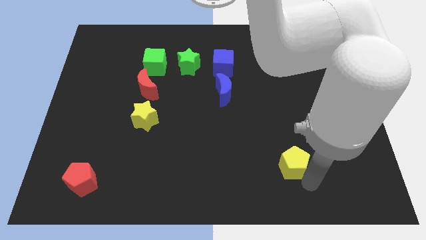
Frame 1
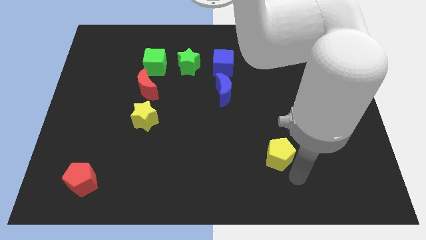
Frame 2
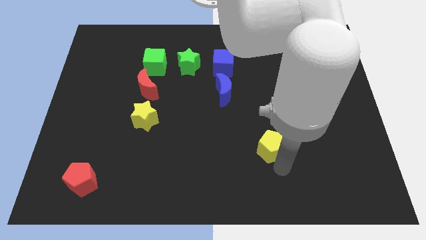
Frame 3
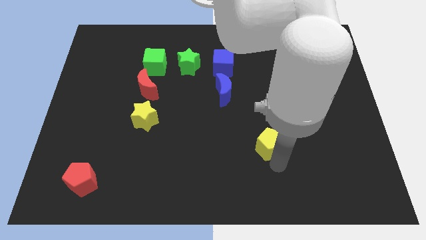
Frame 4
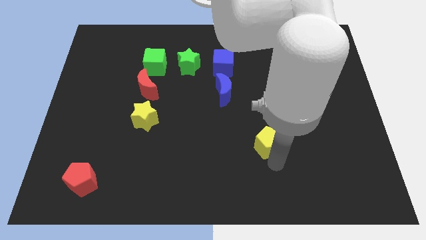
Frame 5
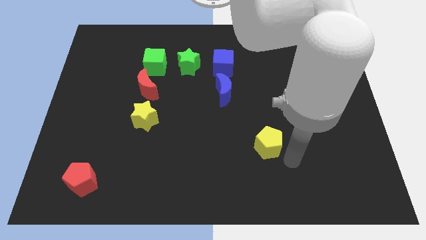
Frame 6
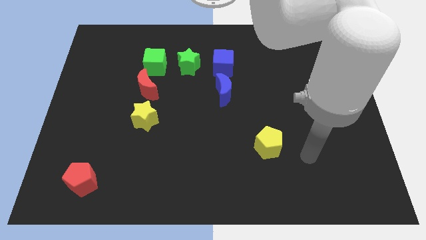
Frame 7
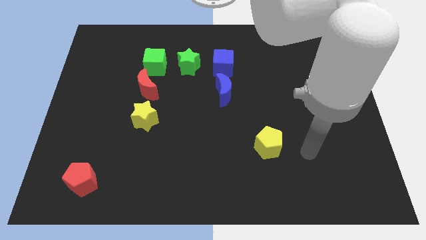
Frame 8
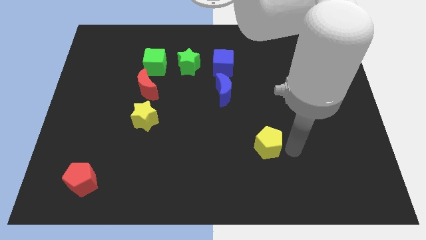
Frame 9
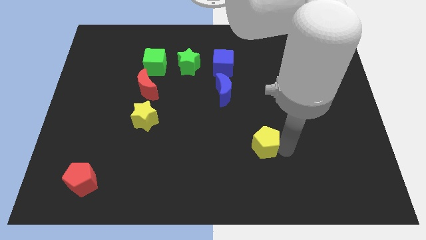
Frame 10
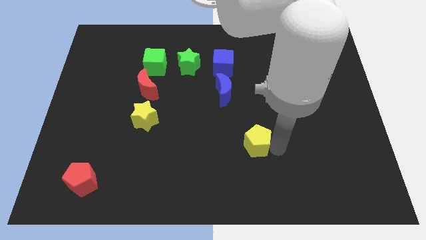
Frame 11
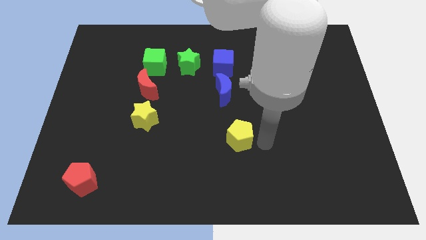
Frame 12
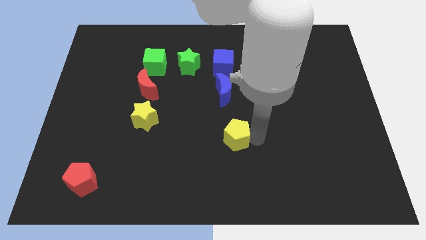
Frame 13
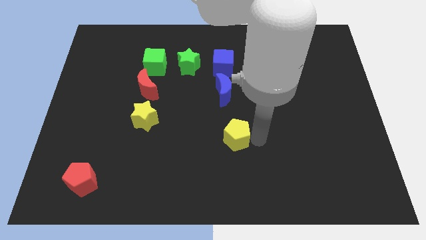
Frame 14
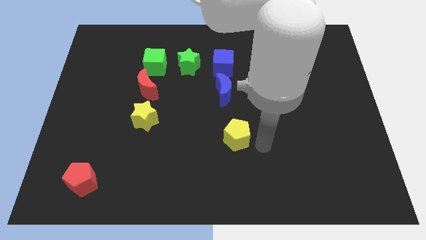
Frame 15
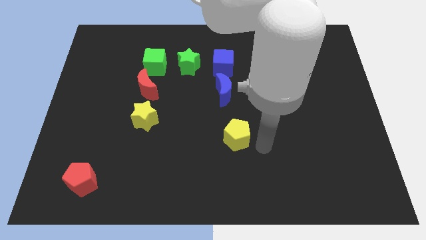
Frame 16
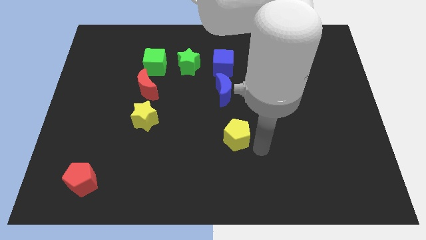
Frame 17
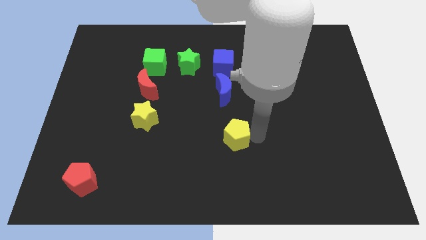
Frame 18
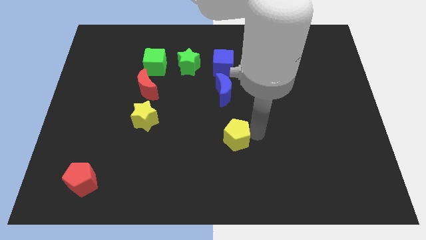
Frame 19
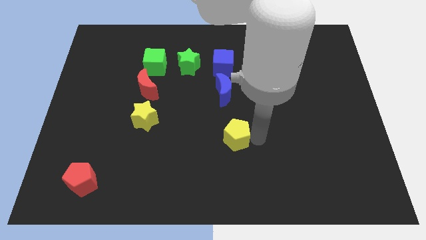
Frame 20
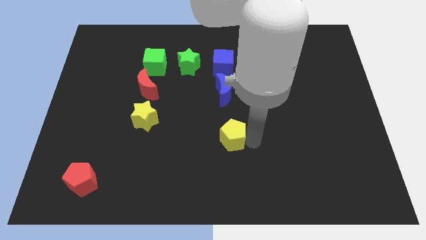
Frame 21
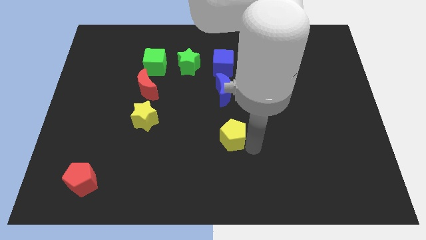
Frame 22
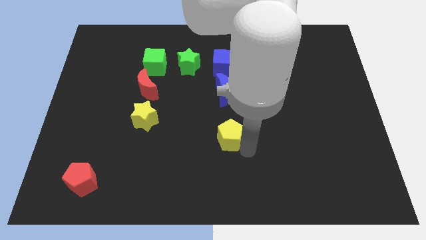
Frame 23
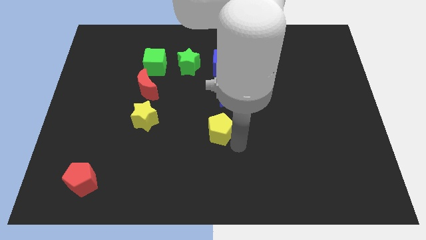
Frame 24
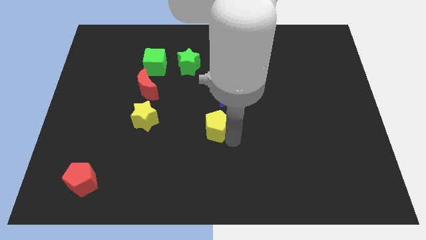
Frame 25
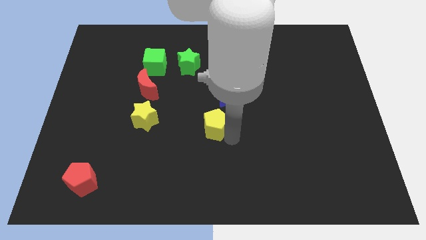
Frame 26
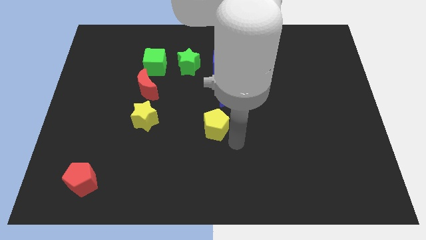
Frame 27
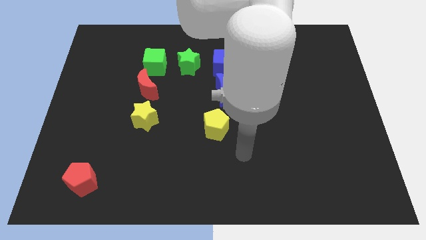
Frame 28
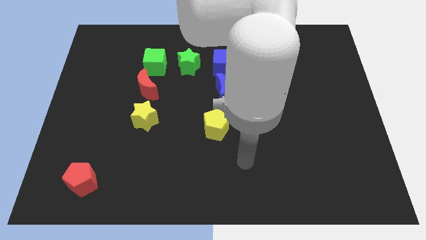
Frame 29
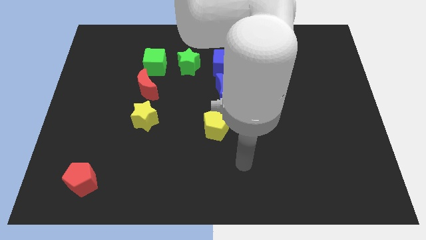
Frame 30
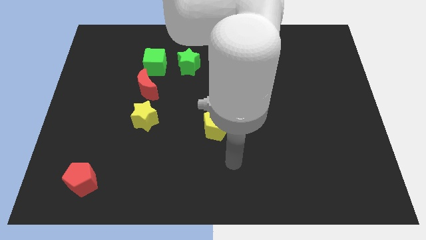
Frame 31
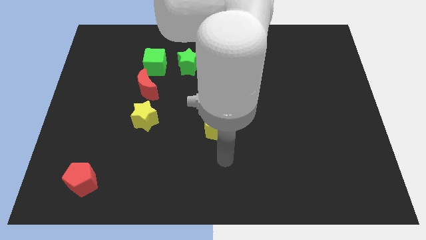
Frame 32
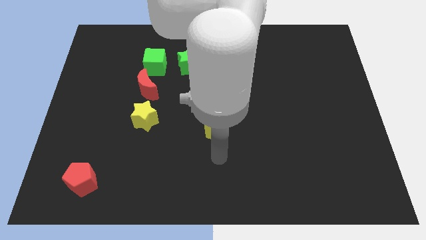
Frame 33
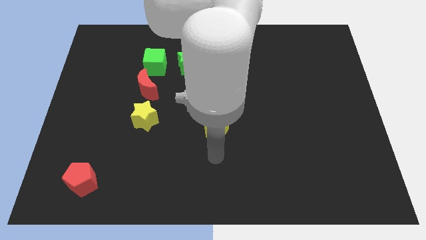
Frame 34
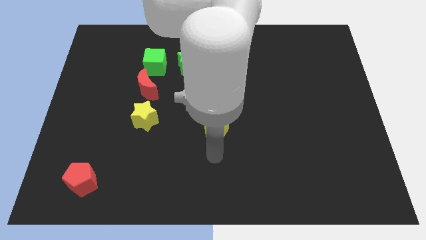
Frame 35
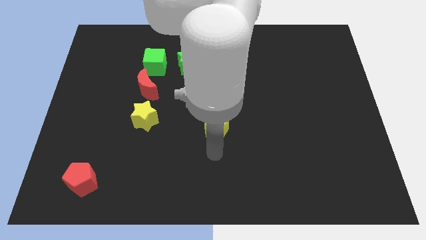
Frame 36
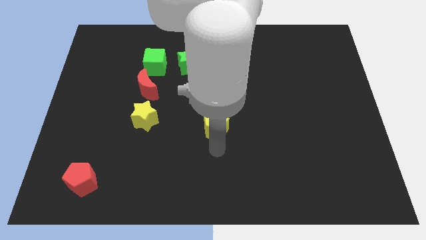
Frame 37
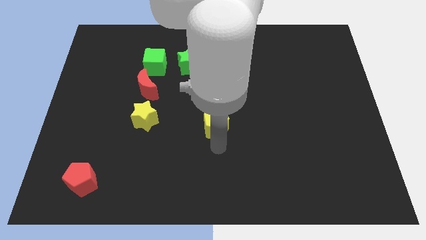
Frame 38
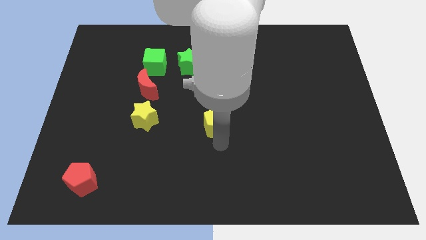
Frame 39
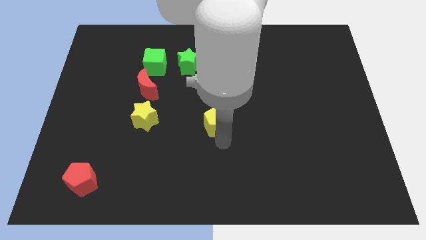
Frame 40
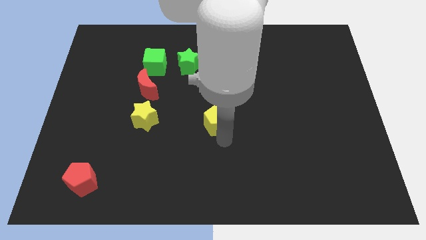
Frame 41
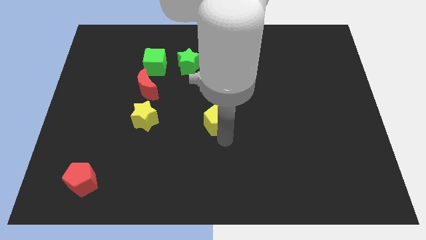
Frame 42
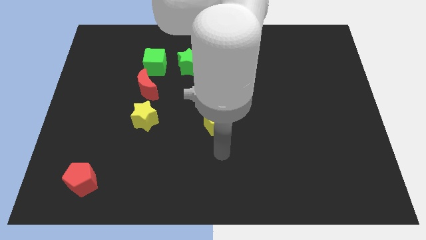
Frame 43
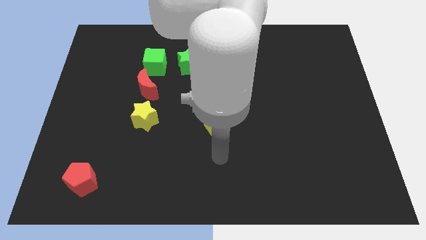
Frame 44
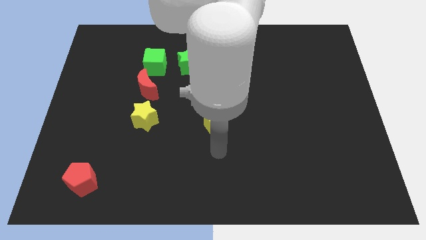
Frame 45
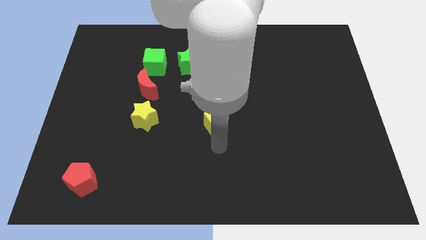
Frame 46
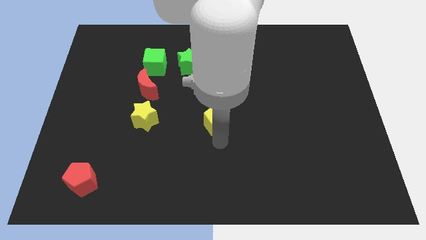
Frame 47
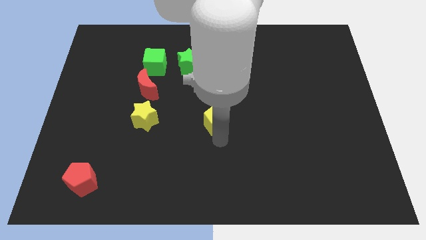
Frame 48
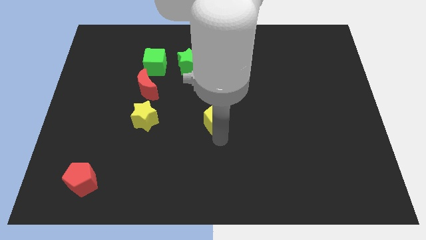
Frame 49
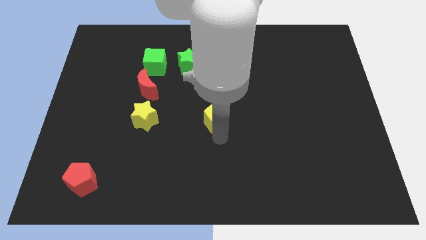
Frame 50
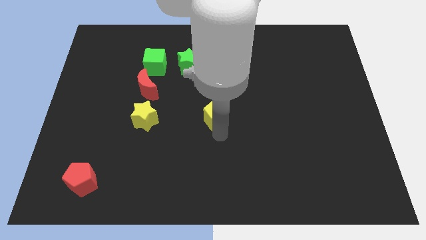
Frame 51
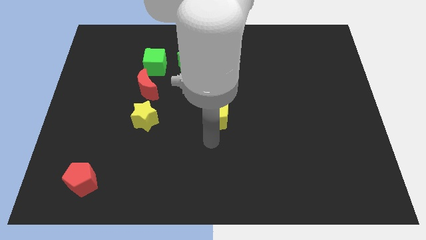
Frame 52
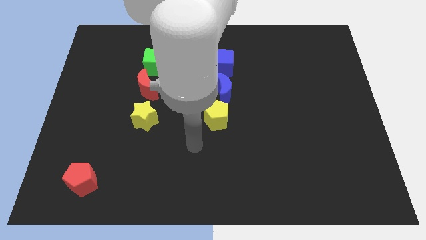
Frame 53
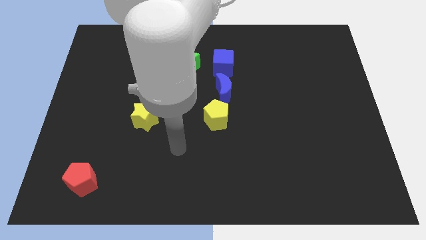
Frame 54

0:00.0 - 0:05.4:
place yellow pentagon below the blue moon

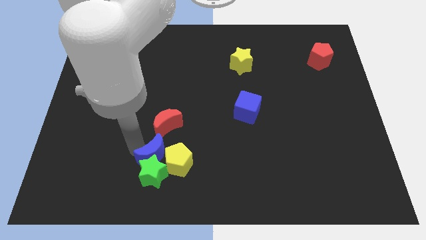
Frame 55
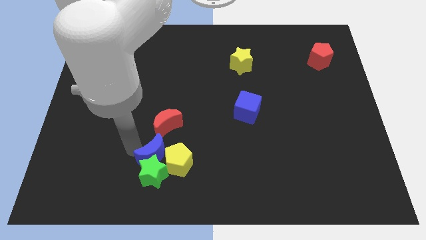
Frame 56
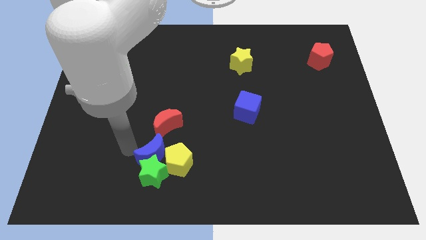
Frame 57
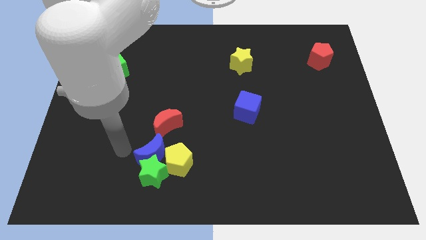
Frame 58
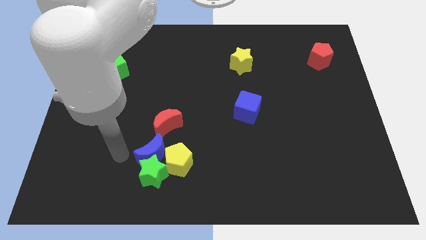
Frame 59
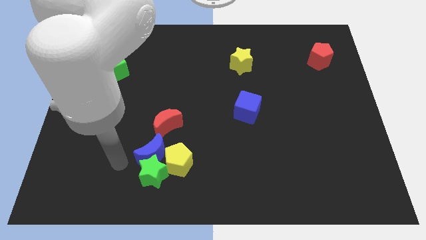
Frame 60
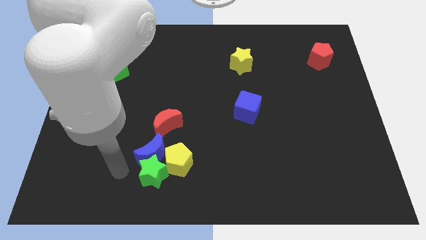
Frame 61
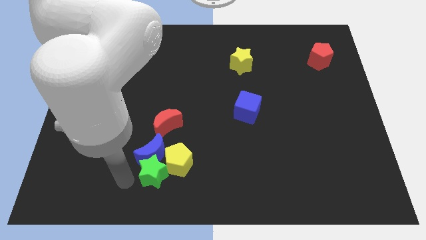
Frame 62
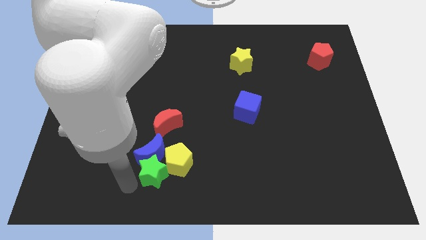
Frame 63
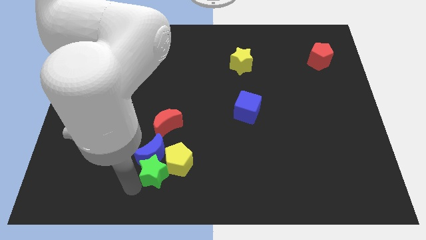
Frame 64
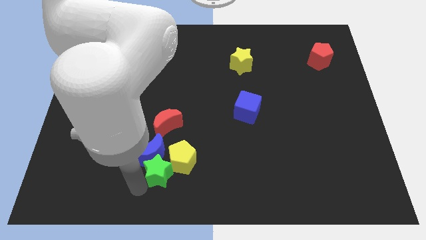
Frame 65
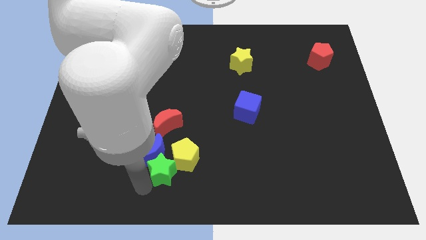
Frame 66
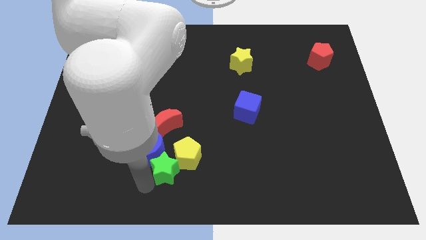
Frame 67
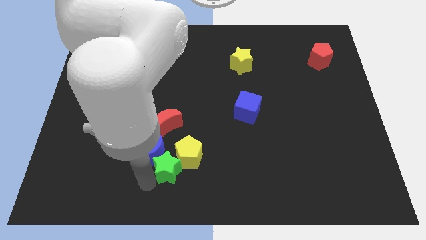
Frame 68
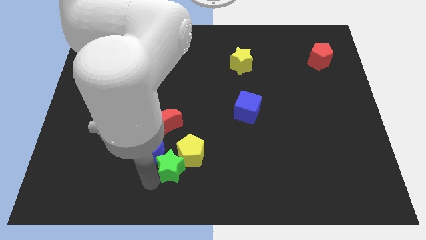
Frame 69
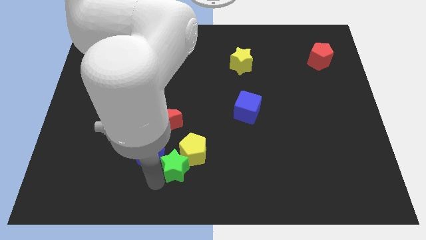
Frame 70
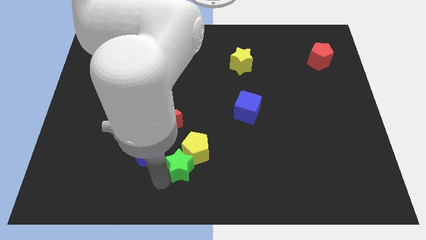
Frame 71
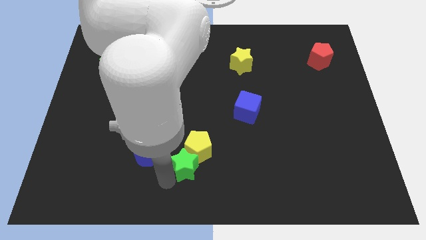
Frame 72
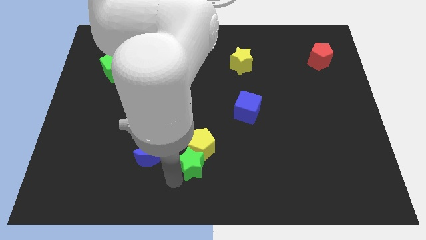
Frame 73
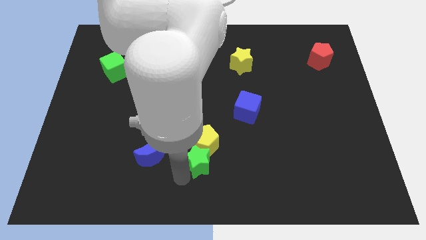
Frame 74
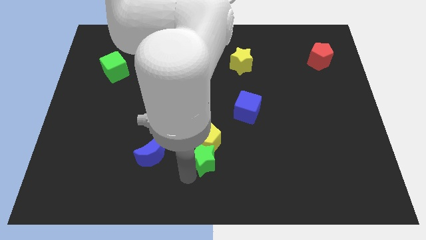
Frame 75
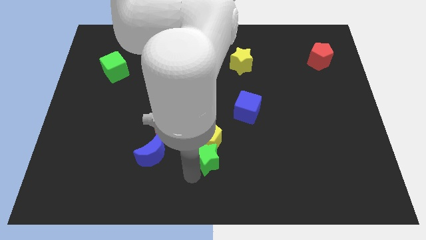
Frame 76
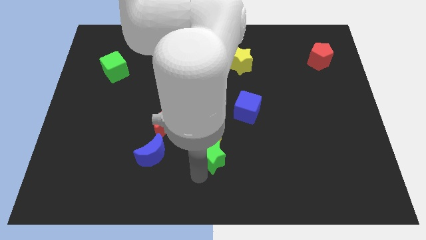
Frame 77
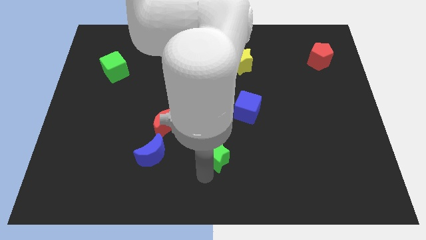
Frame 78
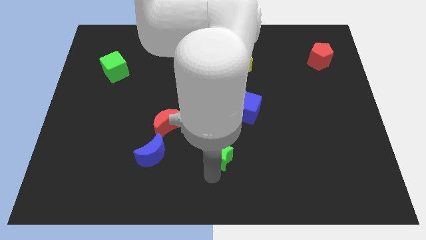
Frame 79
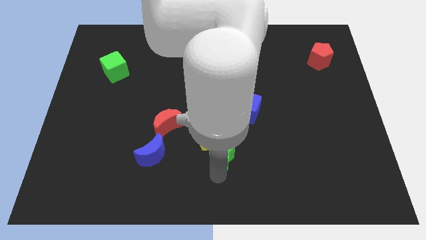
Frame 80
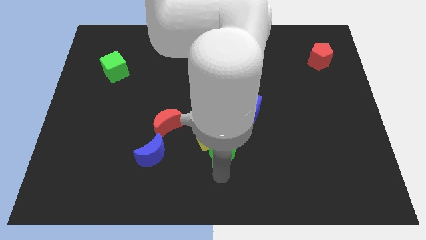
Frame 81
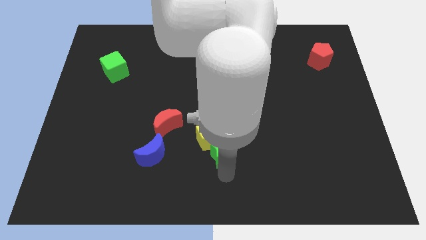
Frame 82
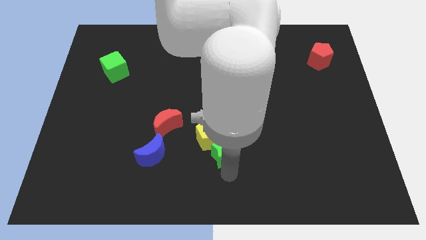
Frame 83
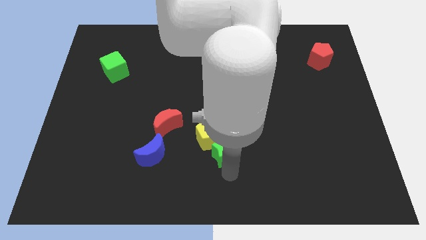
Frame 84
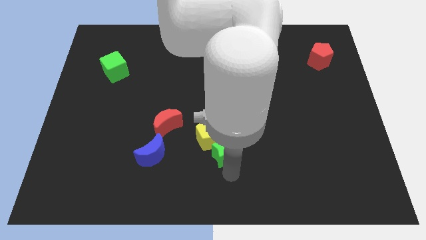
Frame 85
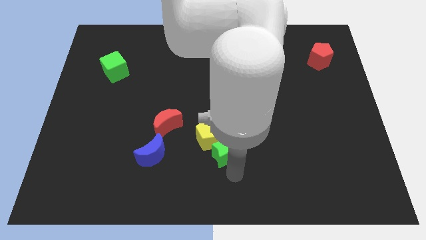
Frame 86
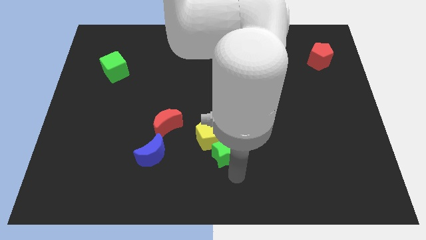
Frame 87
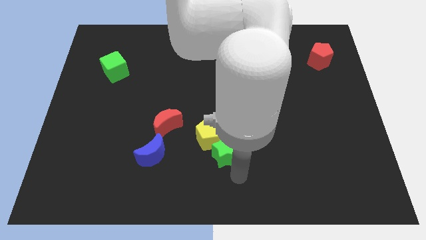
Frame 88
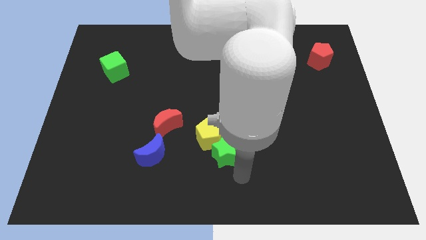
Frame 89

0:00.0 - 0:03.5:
push the green star and yellow pentagon upward
